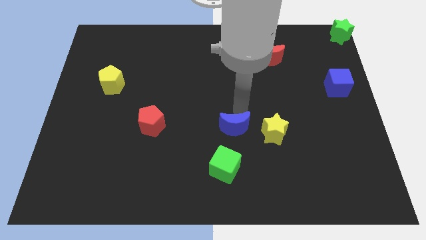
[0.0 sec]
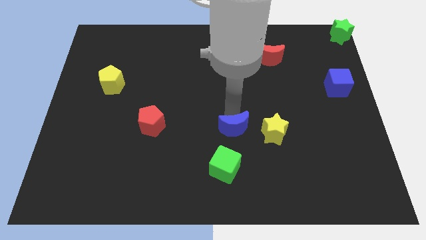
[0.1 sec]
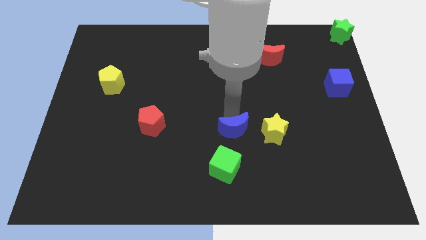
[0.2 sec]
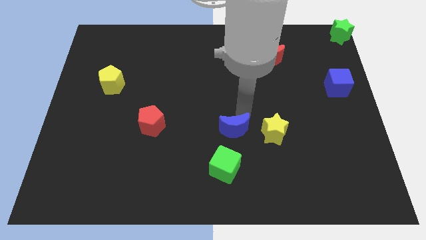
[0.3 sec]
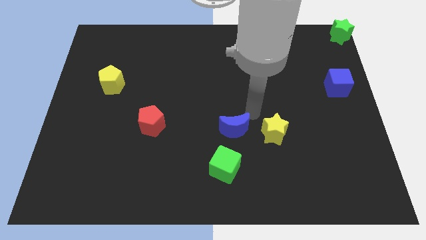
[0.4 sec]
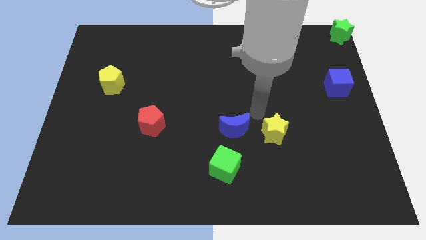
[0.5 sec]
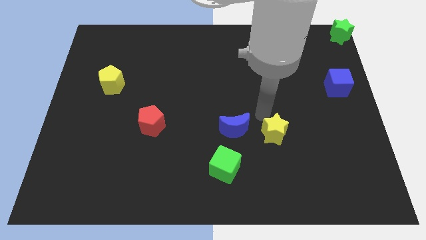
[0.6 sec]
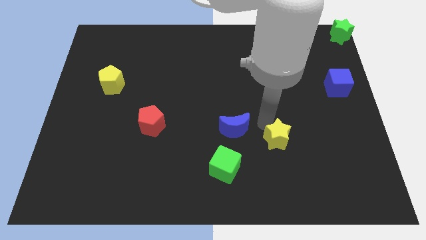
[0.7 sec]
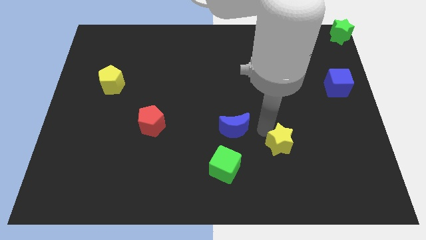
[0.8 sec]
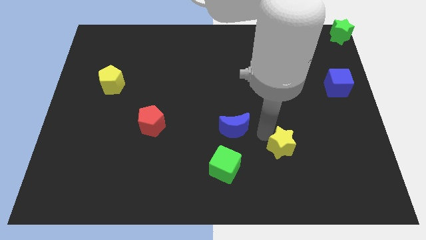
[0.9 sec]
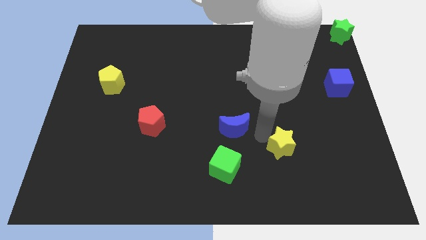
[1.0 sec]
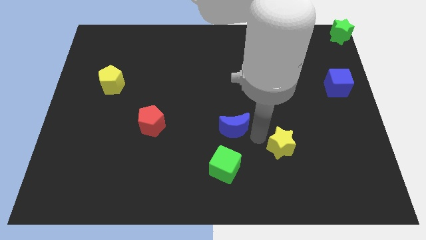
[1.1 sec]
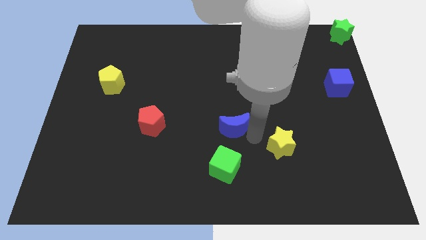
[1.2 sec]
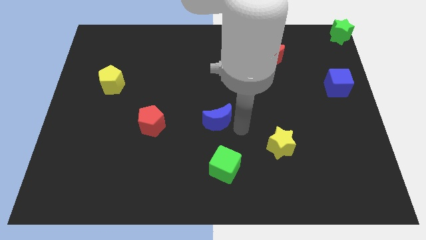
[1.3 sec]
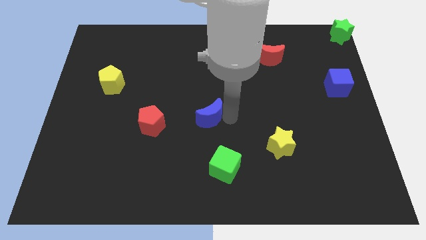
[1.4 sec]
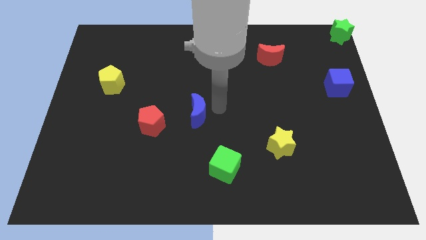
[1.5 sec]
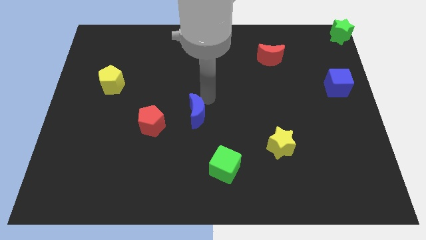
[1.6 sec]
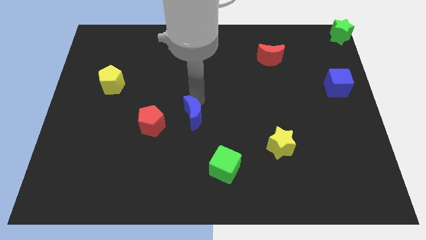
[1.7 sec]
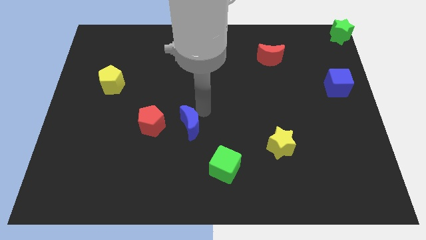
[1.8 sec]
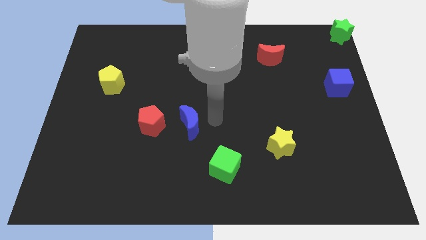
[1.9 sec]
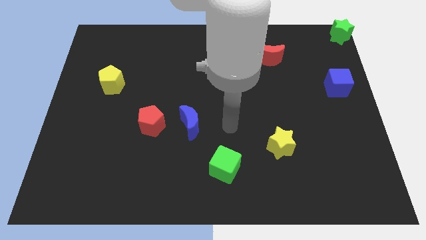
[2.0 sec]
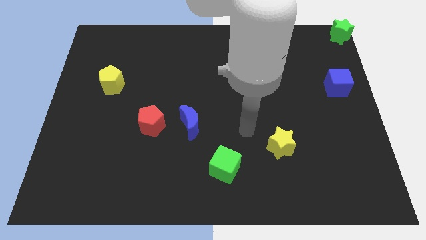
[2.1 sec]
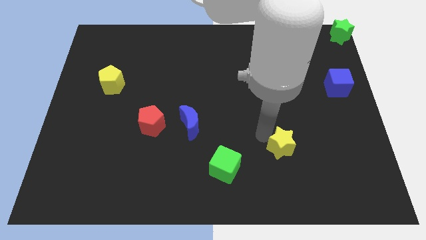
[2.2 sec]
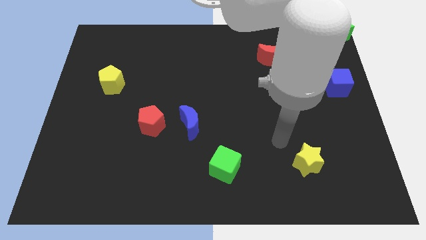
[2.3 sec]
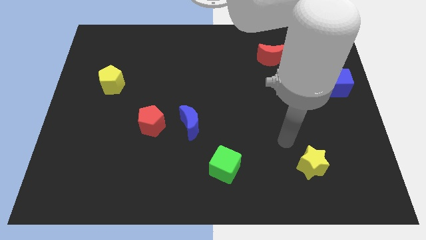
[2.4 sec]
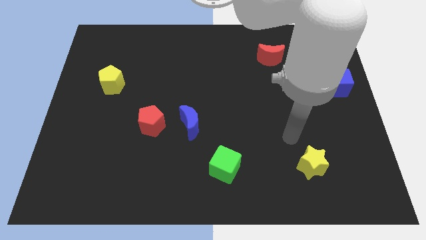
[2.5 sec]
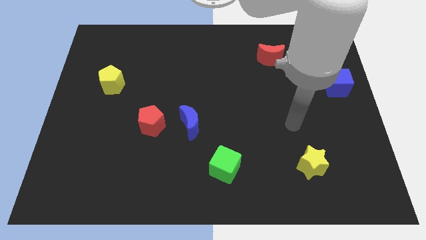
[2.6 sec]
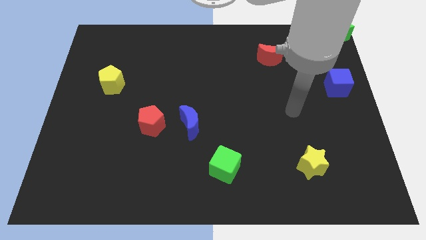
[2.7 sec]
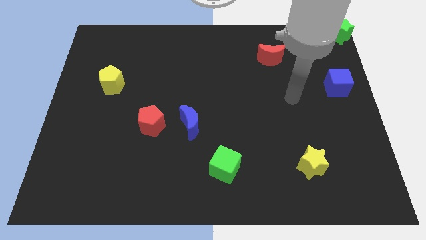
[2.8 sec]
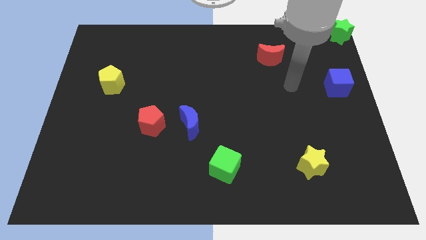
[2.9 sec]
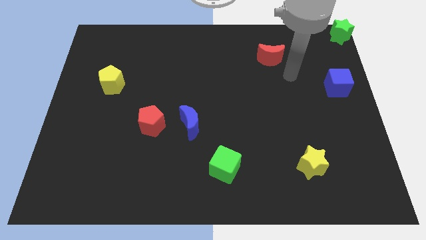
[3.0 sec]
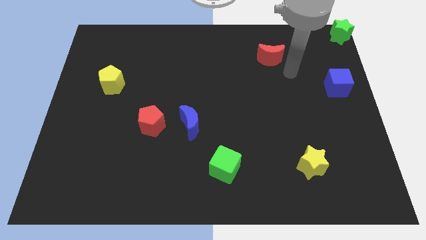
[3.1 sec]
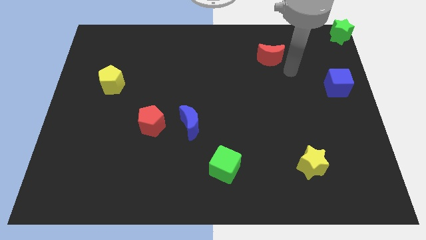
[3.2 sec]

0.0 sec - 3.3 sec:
place the blue crescent to the right of the red pentagon

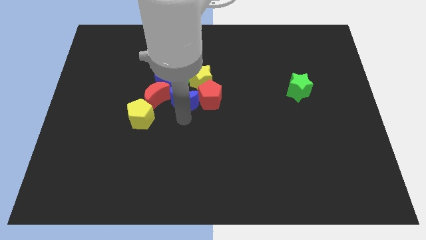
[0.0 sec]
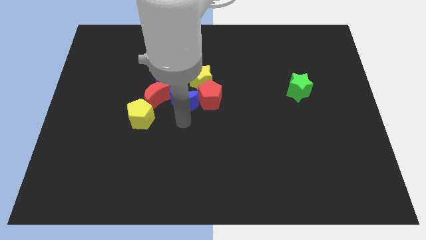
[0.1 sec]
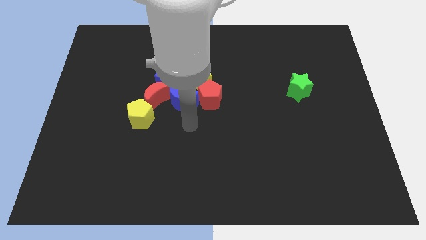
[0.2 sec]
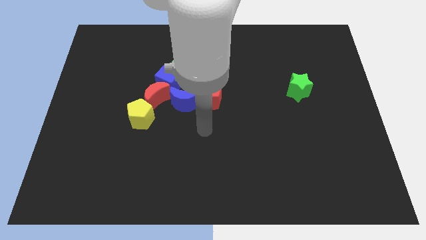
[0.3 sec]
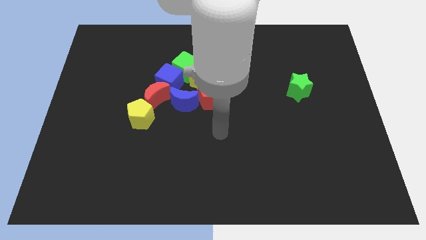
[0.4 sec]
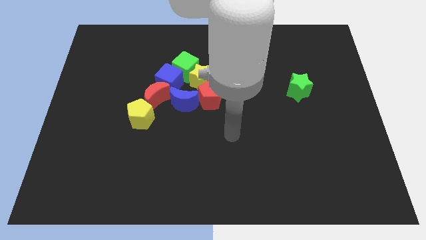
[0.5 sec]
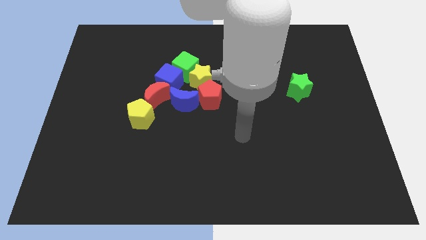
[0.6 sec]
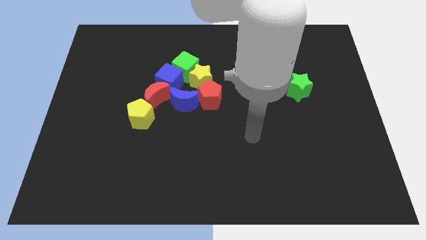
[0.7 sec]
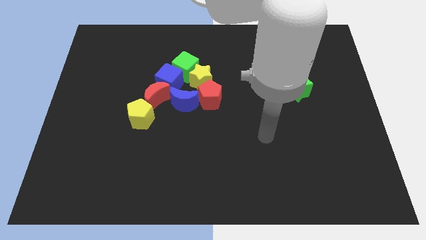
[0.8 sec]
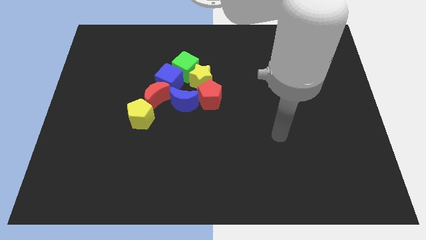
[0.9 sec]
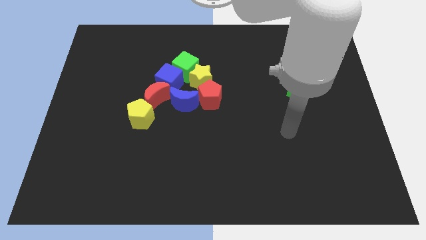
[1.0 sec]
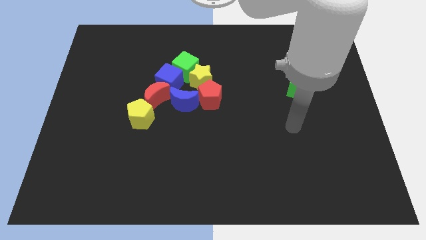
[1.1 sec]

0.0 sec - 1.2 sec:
move the arm away from the blue crescent

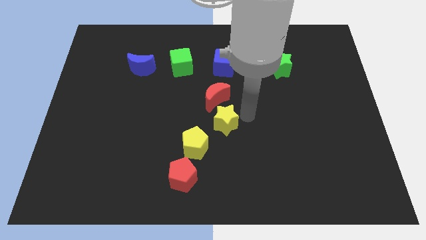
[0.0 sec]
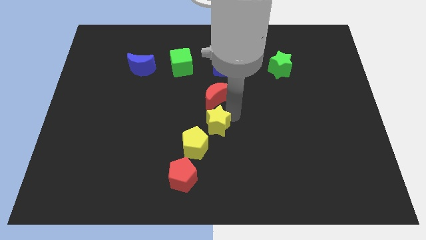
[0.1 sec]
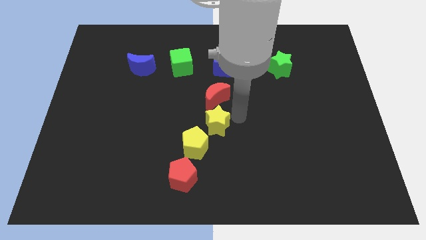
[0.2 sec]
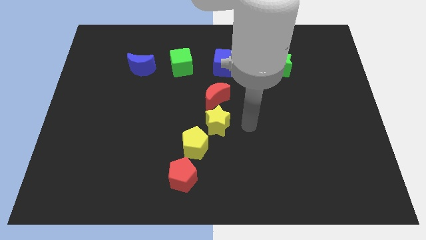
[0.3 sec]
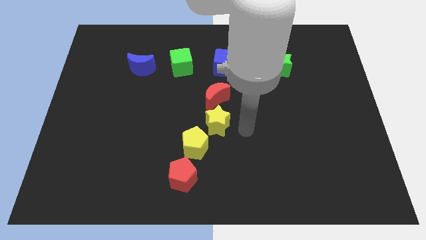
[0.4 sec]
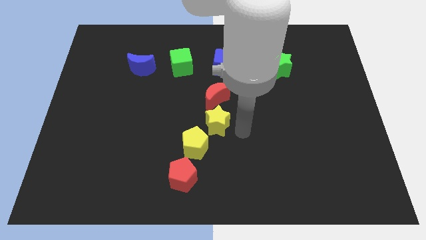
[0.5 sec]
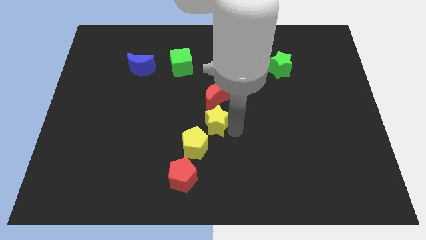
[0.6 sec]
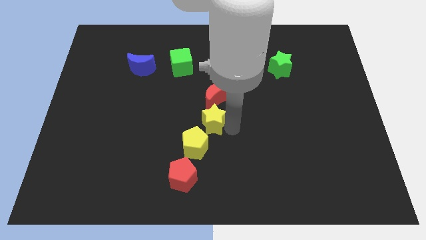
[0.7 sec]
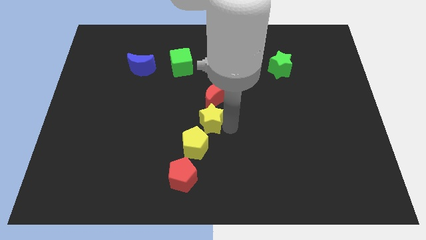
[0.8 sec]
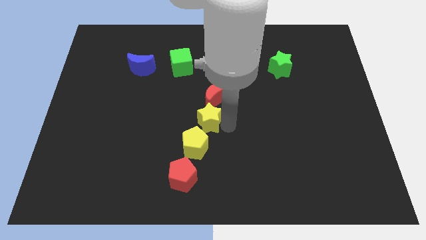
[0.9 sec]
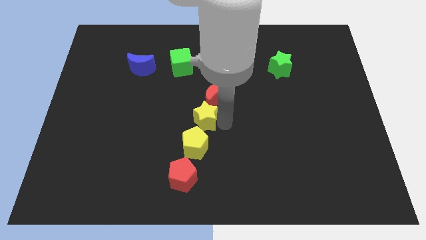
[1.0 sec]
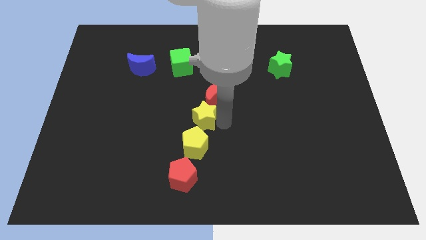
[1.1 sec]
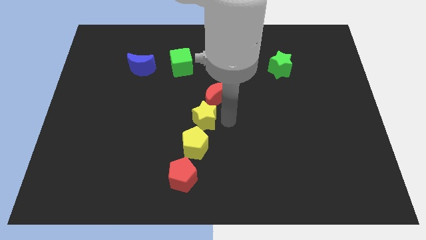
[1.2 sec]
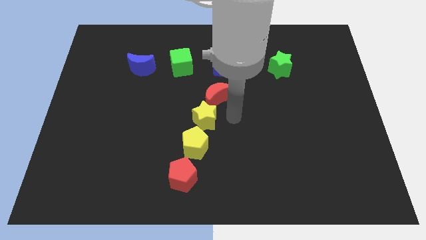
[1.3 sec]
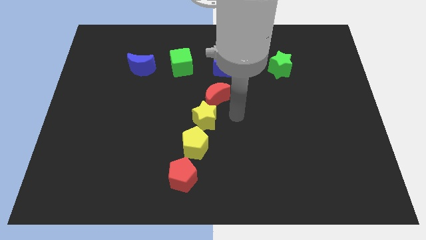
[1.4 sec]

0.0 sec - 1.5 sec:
place yellow star above yellow pentagon

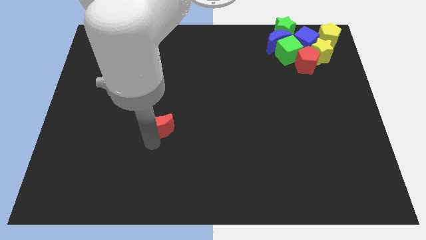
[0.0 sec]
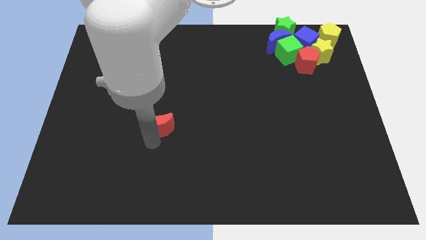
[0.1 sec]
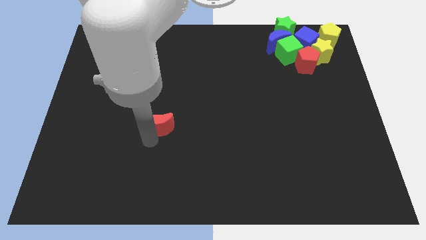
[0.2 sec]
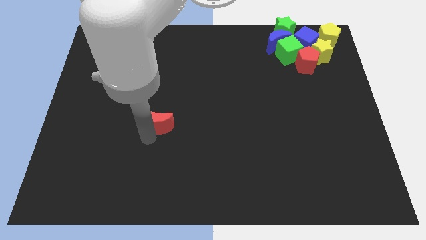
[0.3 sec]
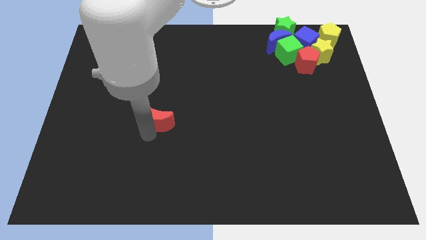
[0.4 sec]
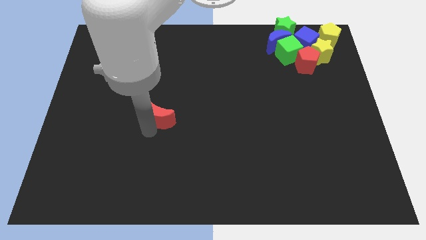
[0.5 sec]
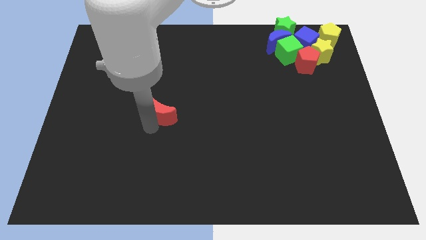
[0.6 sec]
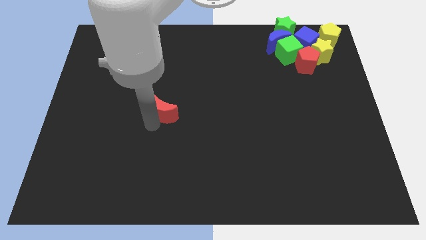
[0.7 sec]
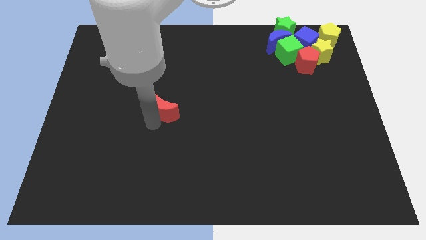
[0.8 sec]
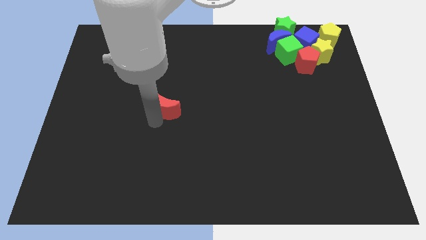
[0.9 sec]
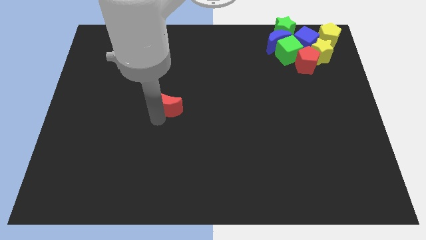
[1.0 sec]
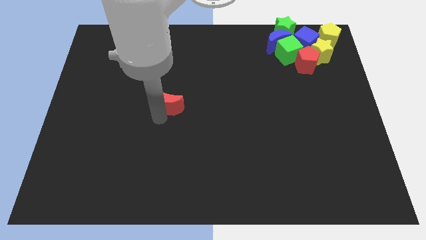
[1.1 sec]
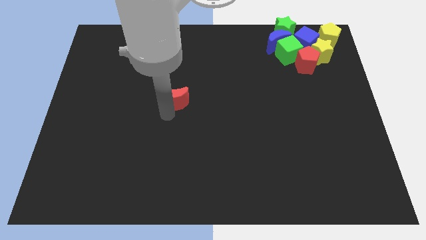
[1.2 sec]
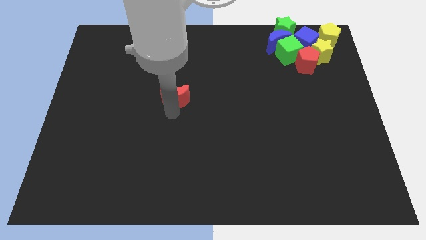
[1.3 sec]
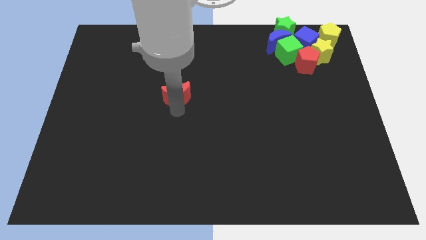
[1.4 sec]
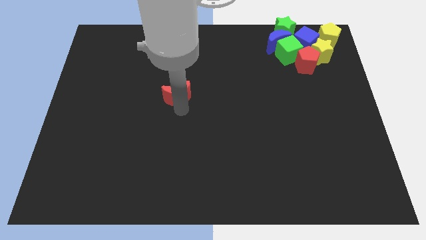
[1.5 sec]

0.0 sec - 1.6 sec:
move the red crescent to the top of the board

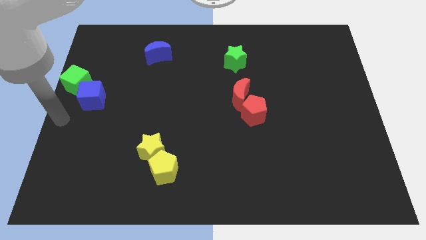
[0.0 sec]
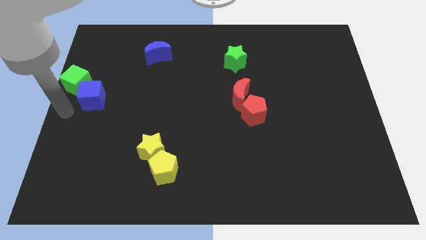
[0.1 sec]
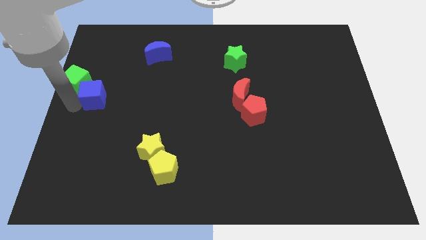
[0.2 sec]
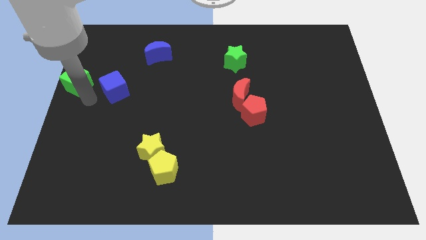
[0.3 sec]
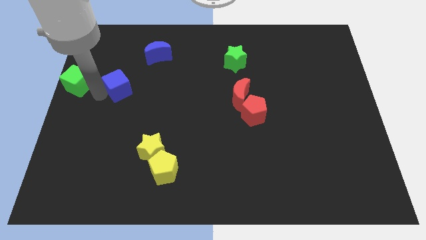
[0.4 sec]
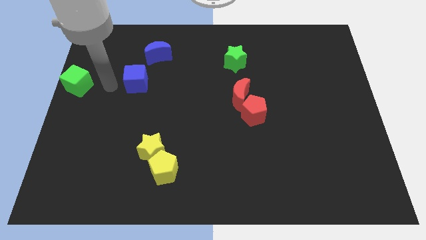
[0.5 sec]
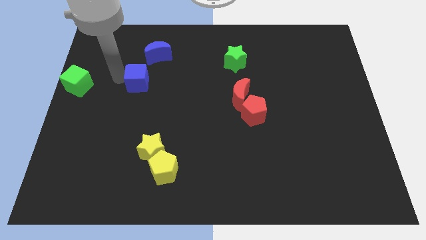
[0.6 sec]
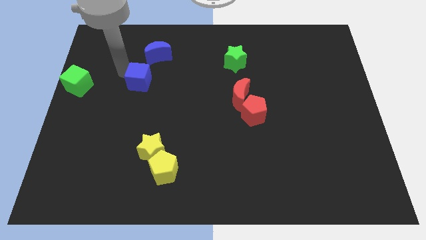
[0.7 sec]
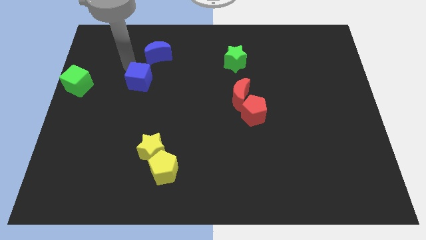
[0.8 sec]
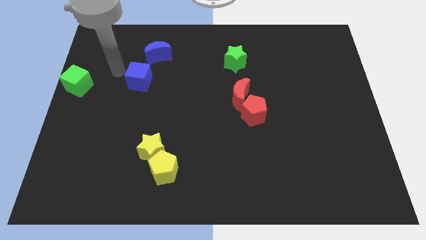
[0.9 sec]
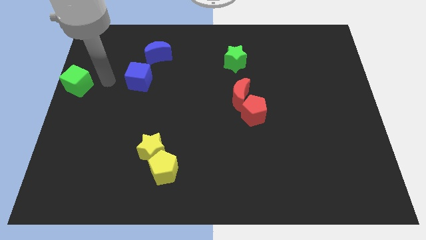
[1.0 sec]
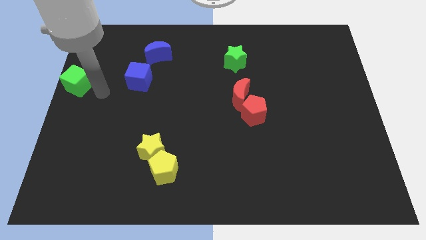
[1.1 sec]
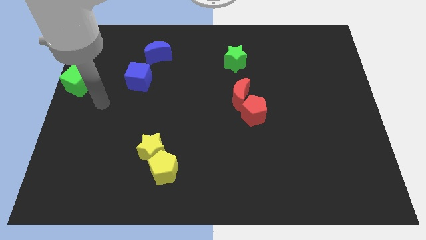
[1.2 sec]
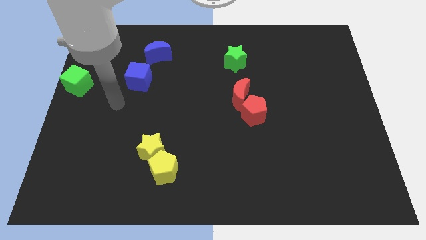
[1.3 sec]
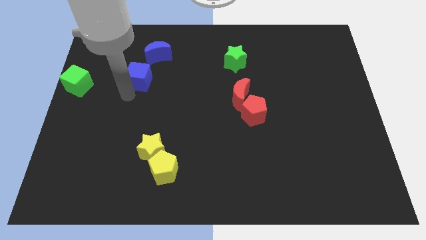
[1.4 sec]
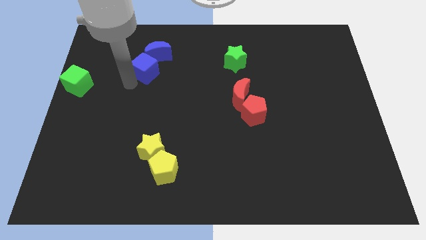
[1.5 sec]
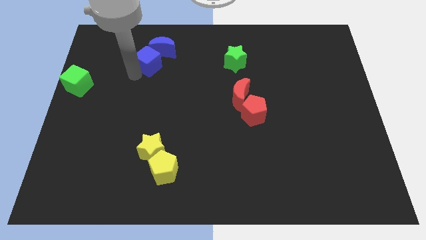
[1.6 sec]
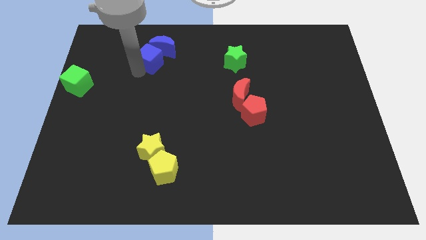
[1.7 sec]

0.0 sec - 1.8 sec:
separate the blue cube from the green cube
